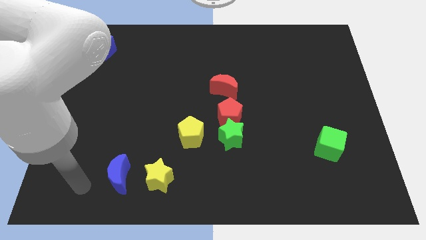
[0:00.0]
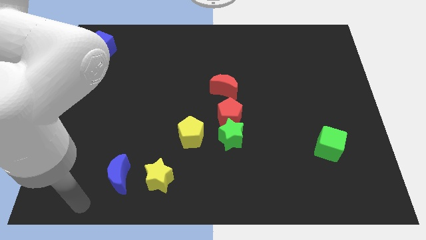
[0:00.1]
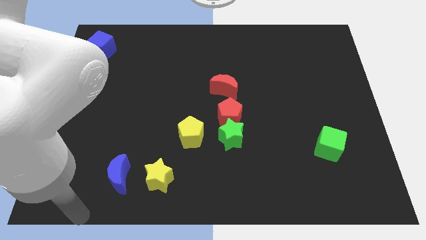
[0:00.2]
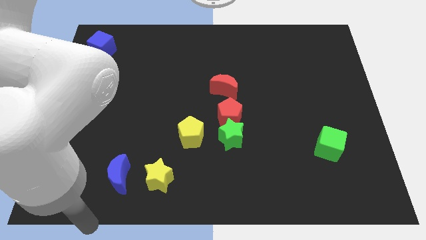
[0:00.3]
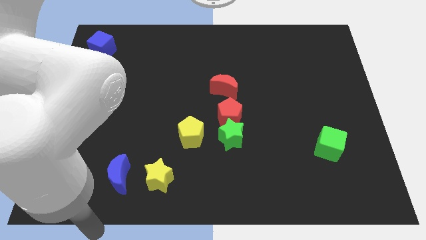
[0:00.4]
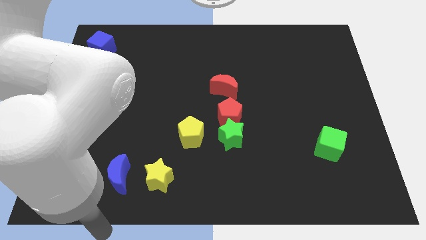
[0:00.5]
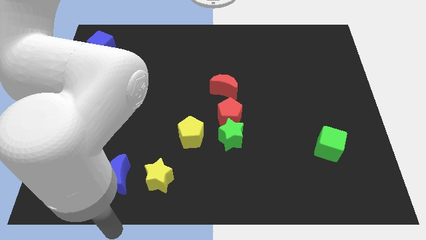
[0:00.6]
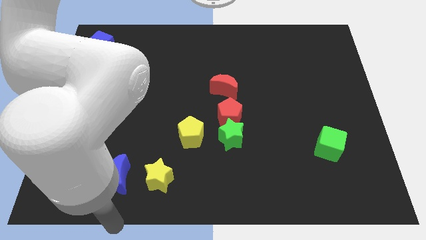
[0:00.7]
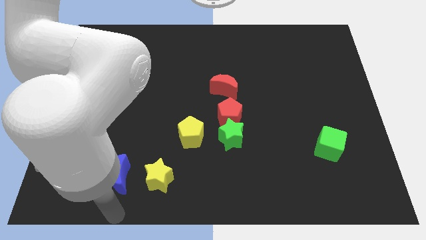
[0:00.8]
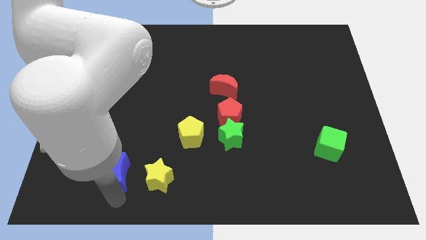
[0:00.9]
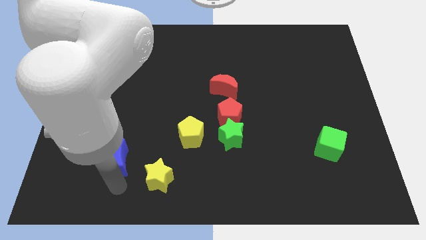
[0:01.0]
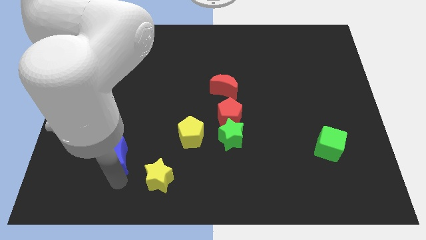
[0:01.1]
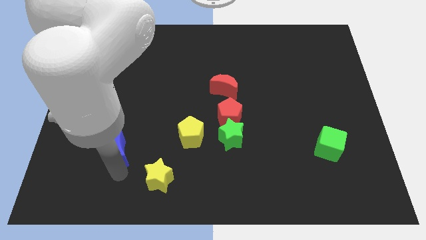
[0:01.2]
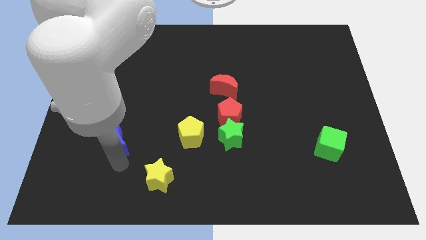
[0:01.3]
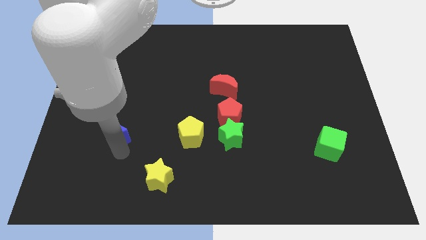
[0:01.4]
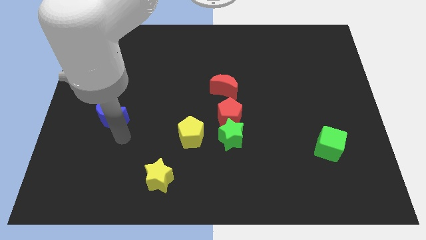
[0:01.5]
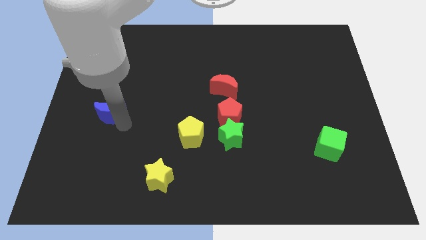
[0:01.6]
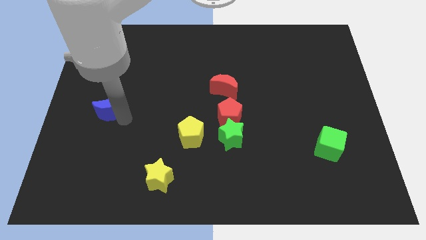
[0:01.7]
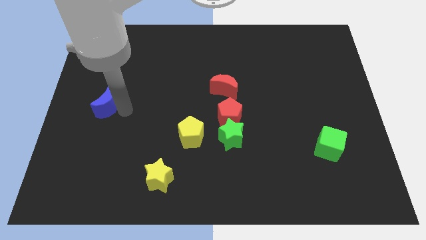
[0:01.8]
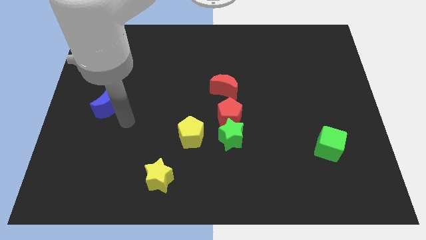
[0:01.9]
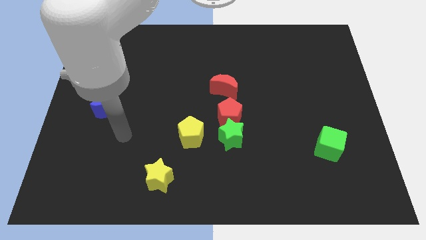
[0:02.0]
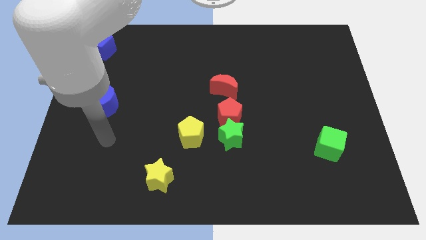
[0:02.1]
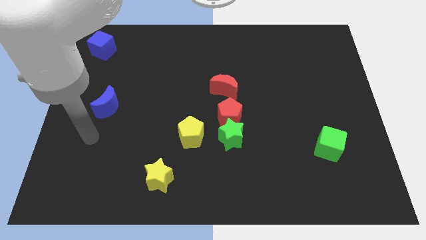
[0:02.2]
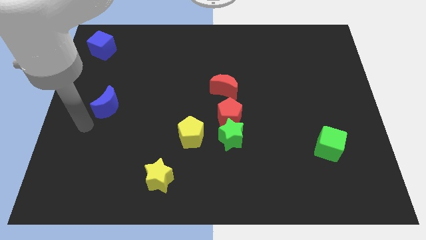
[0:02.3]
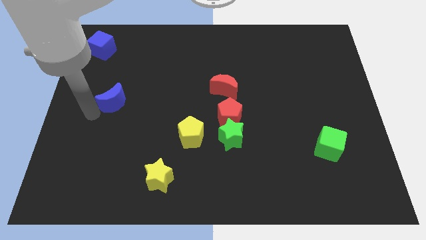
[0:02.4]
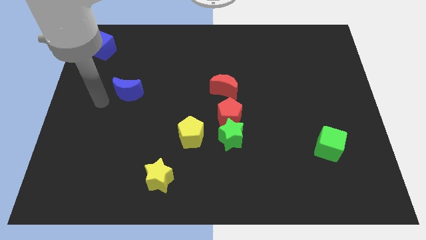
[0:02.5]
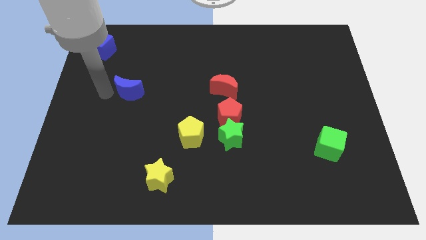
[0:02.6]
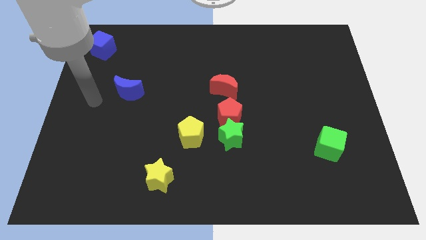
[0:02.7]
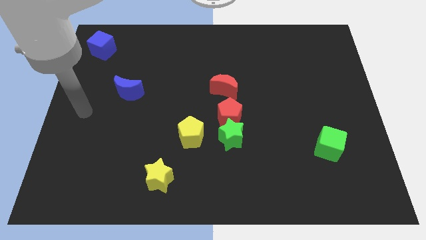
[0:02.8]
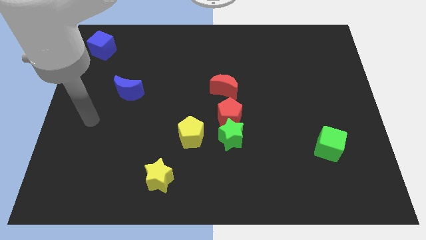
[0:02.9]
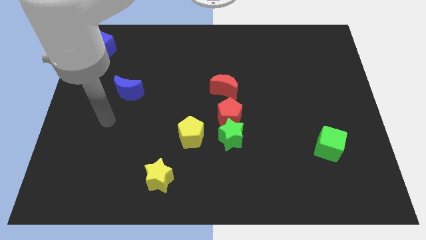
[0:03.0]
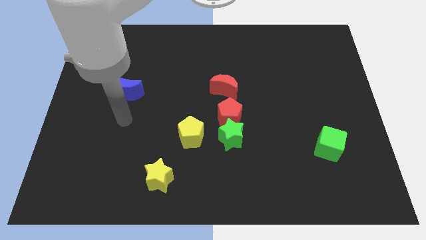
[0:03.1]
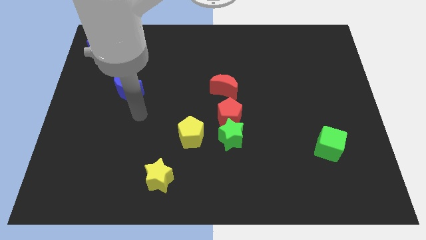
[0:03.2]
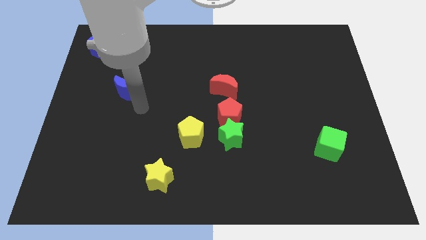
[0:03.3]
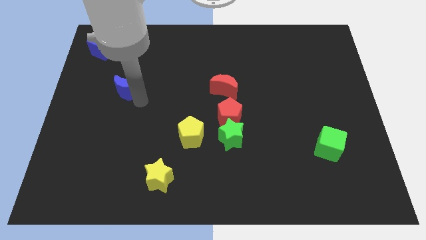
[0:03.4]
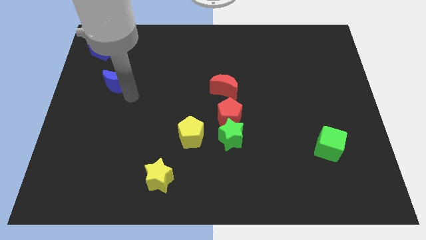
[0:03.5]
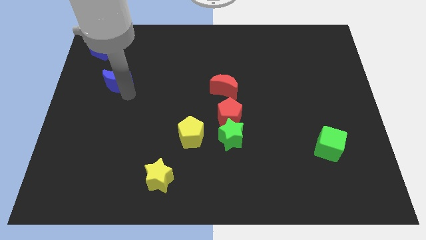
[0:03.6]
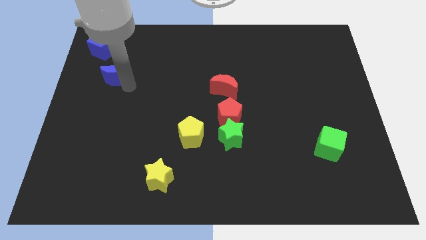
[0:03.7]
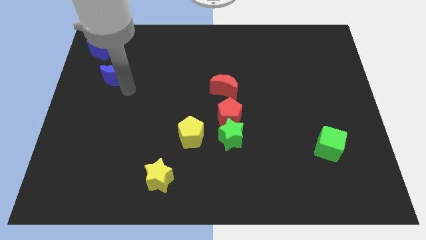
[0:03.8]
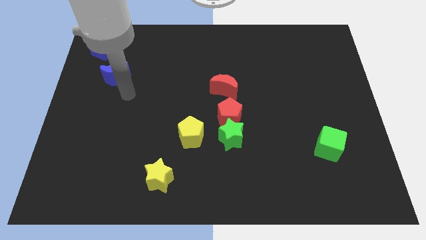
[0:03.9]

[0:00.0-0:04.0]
move the blue crescent towards the blue cube

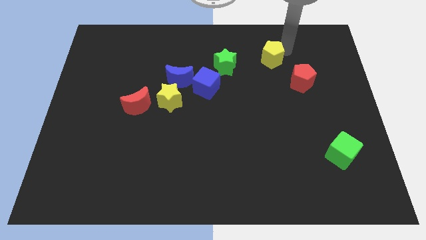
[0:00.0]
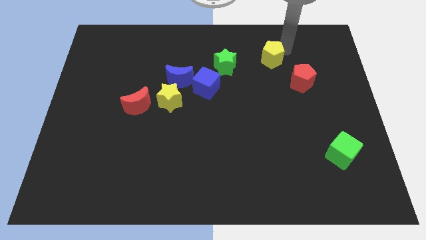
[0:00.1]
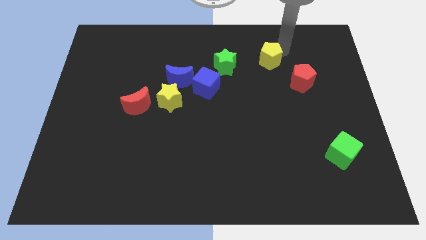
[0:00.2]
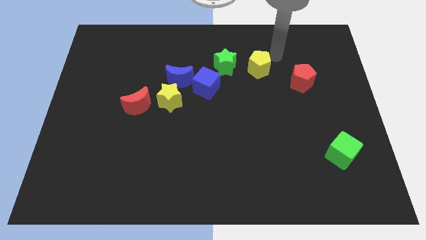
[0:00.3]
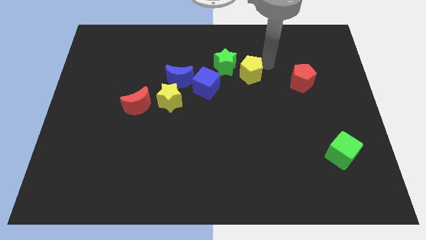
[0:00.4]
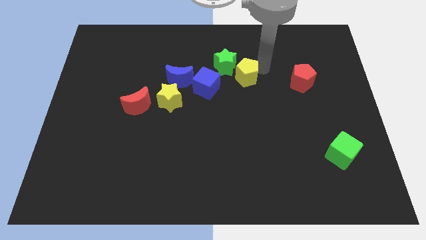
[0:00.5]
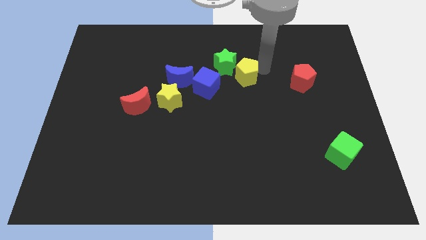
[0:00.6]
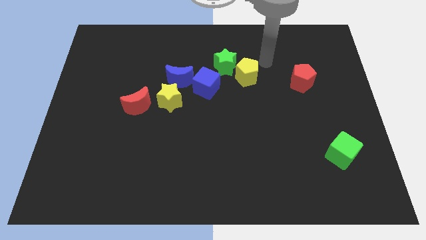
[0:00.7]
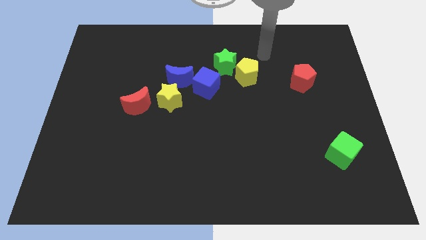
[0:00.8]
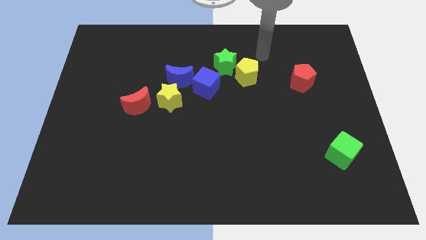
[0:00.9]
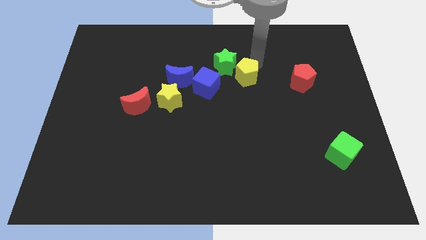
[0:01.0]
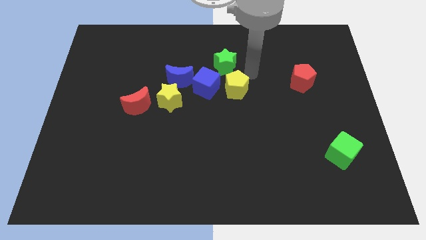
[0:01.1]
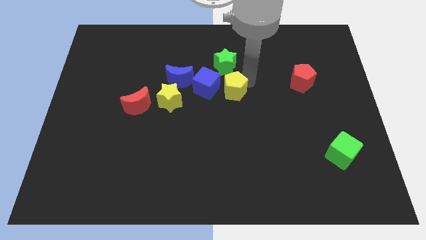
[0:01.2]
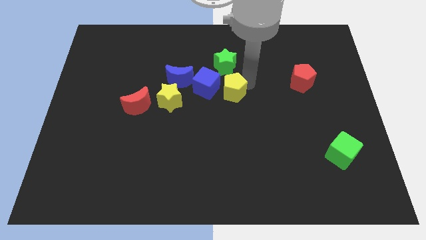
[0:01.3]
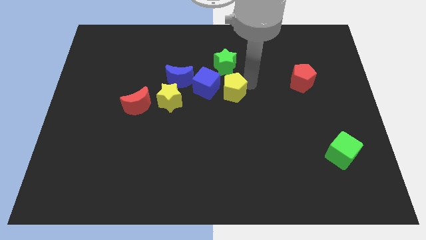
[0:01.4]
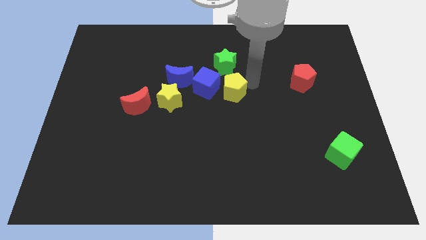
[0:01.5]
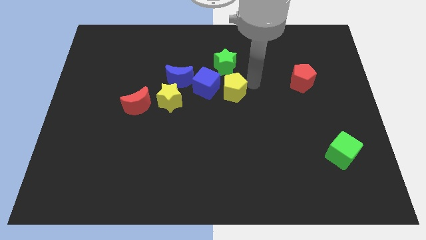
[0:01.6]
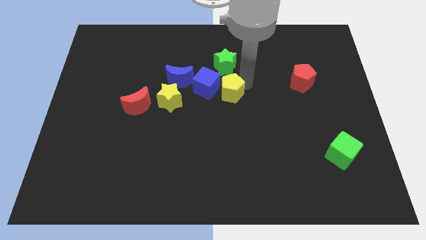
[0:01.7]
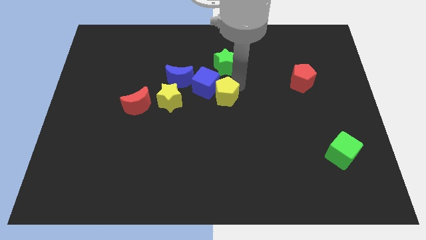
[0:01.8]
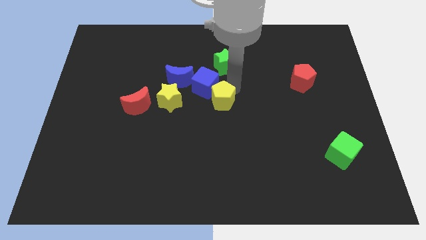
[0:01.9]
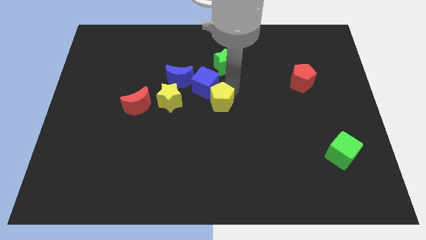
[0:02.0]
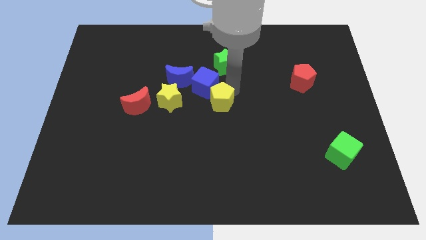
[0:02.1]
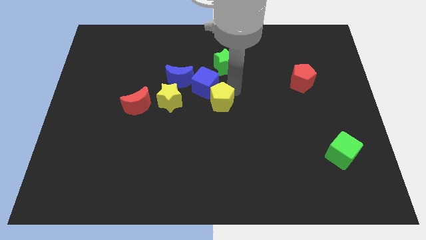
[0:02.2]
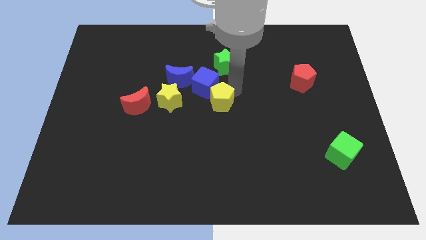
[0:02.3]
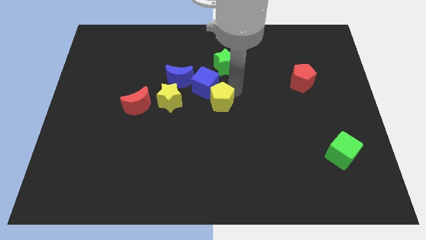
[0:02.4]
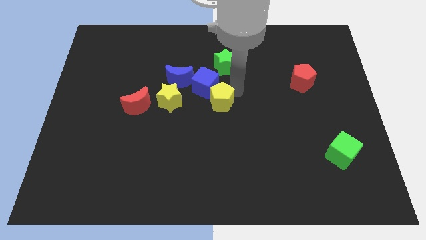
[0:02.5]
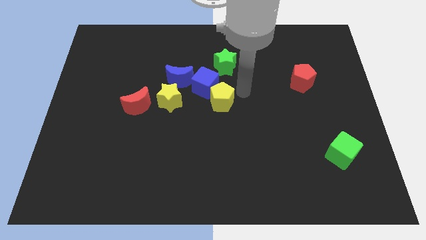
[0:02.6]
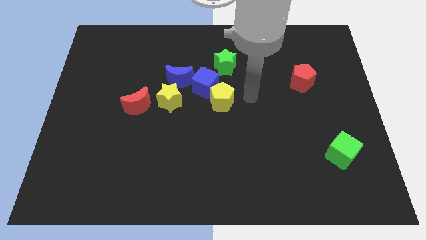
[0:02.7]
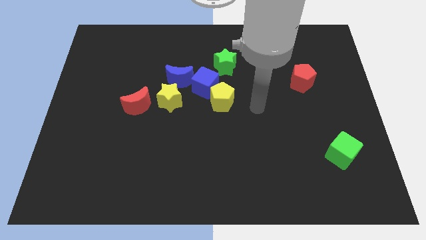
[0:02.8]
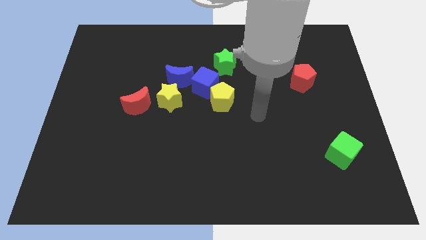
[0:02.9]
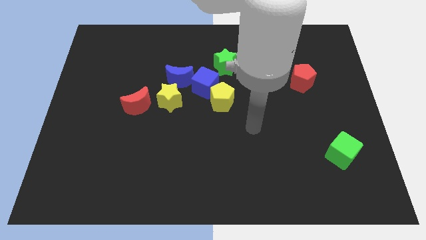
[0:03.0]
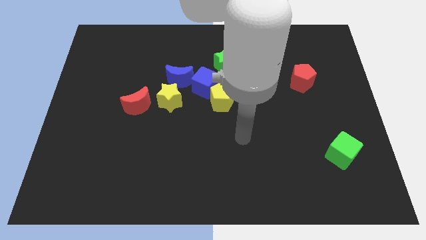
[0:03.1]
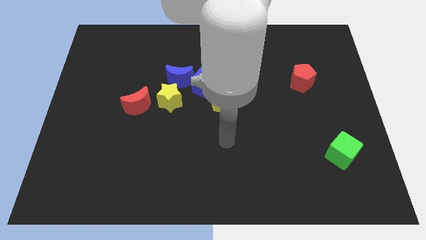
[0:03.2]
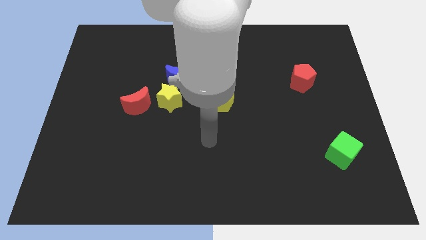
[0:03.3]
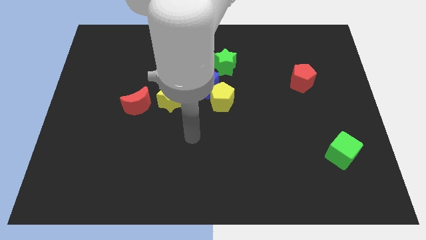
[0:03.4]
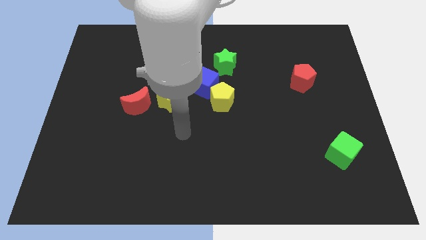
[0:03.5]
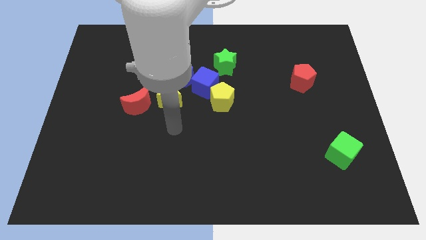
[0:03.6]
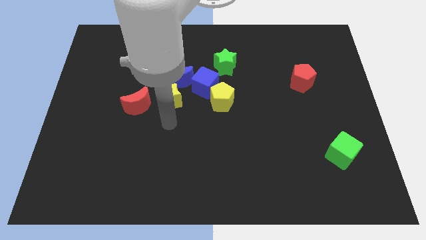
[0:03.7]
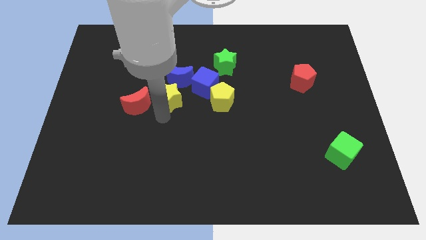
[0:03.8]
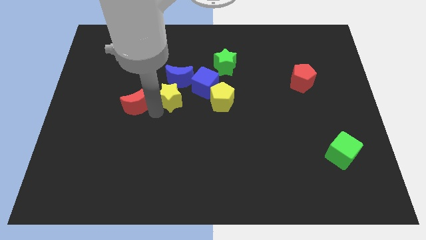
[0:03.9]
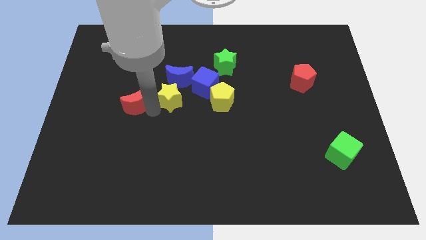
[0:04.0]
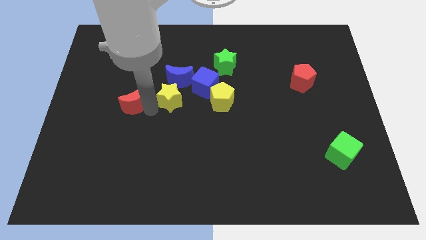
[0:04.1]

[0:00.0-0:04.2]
move the arm below the red moon

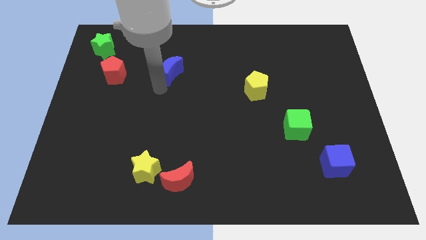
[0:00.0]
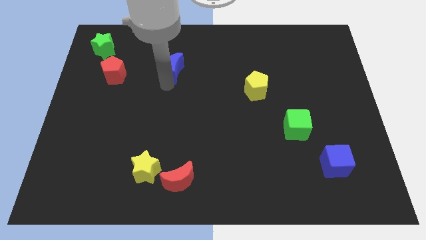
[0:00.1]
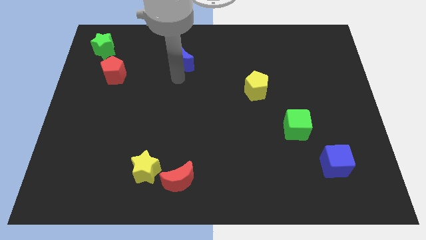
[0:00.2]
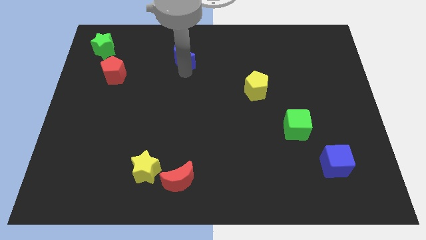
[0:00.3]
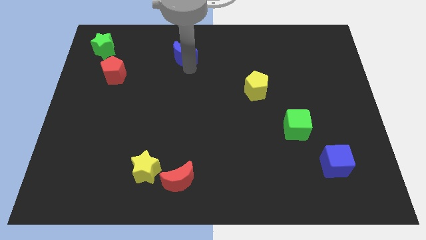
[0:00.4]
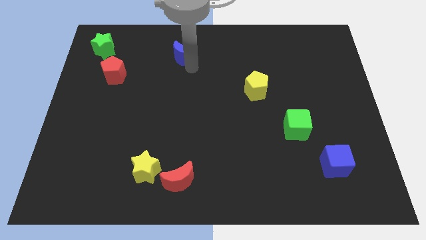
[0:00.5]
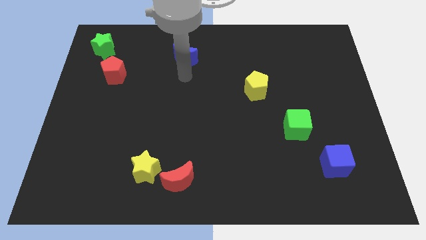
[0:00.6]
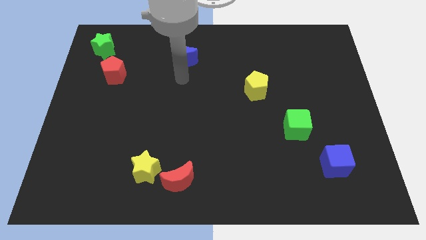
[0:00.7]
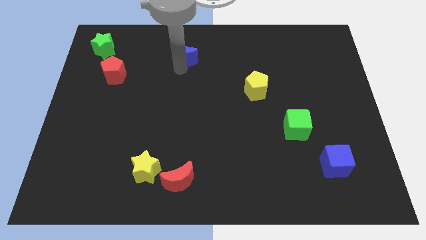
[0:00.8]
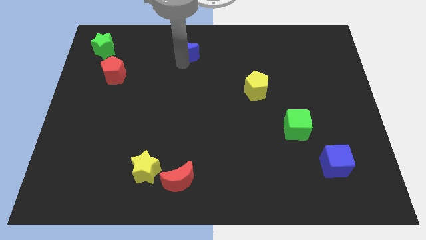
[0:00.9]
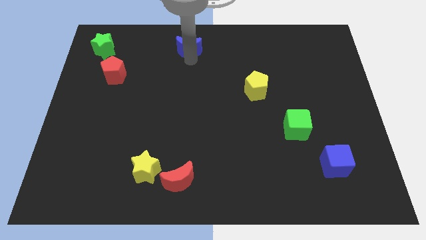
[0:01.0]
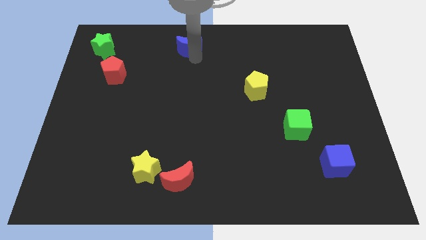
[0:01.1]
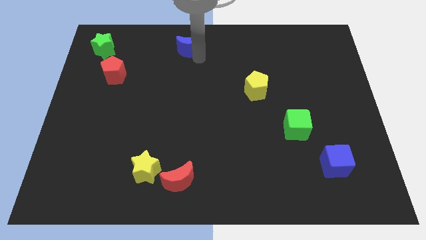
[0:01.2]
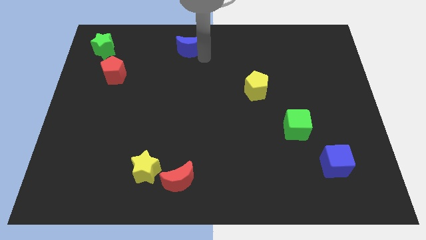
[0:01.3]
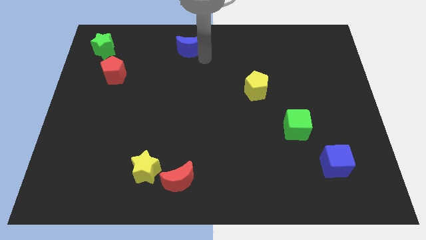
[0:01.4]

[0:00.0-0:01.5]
push blue moon to the top center of the board
